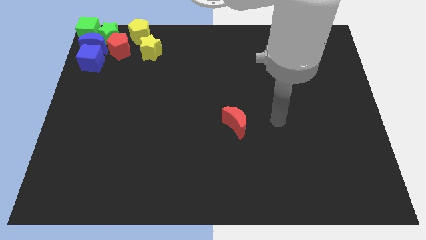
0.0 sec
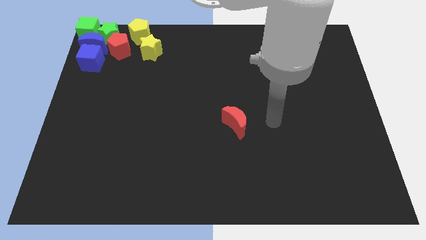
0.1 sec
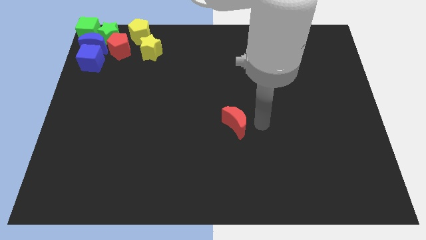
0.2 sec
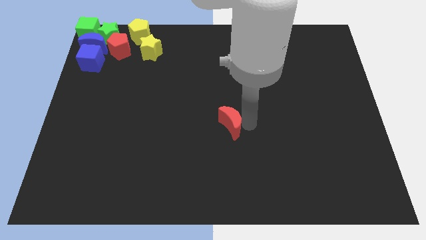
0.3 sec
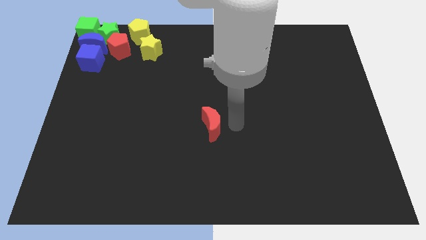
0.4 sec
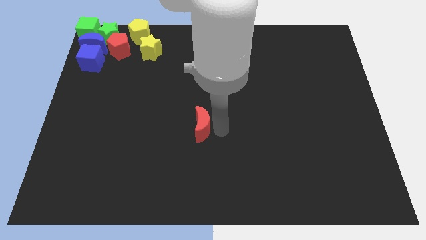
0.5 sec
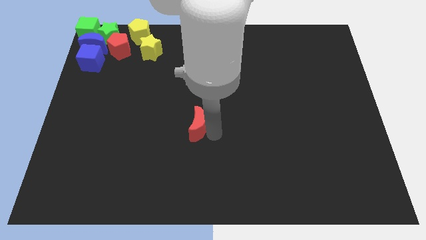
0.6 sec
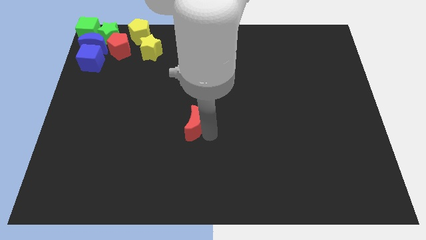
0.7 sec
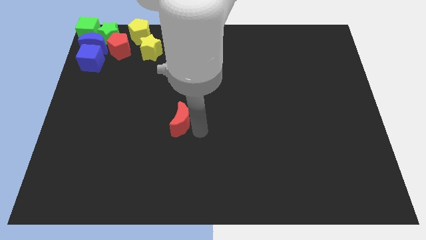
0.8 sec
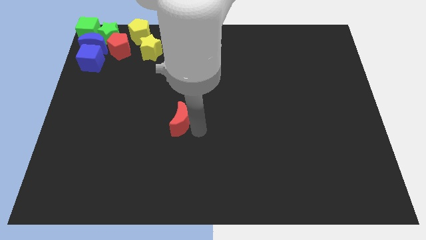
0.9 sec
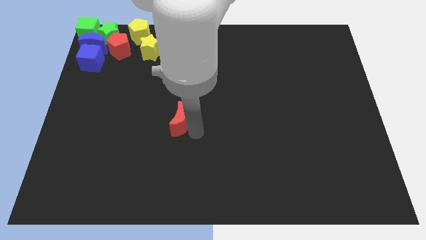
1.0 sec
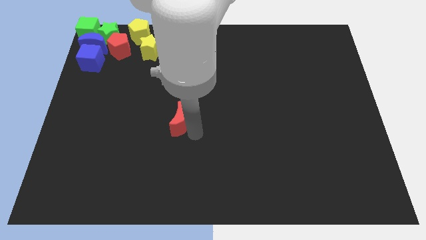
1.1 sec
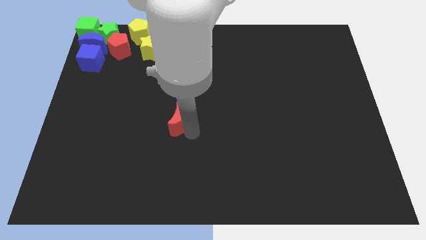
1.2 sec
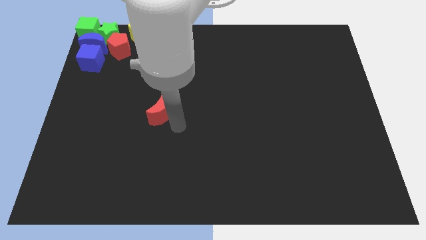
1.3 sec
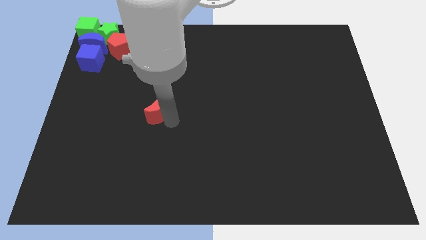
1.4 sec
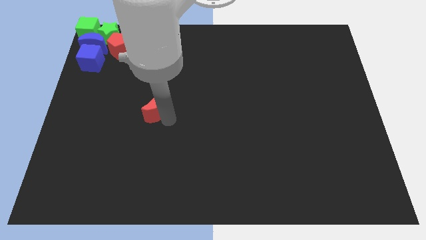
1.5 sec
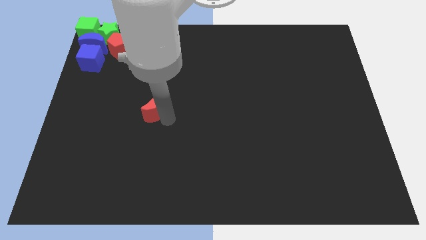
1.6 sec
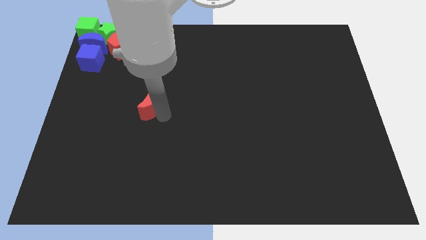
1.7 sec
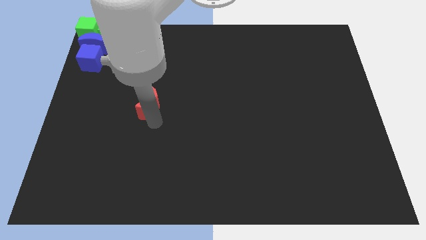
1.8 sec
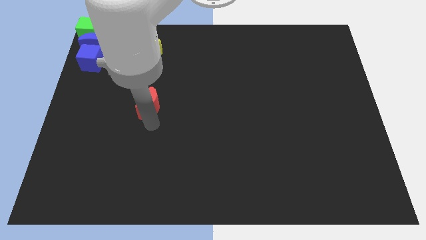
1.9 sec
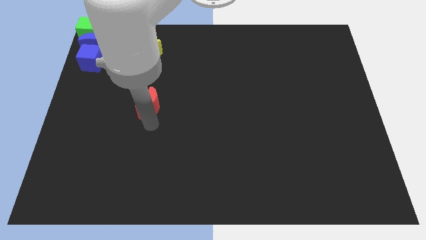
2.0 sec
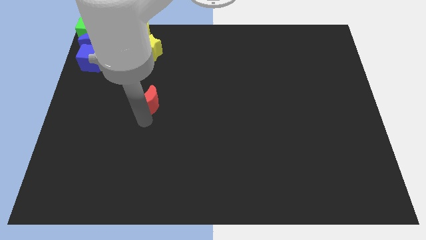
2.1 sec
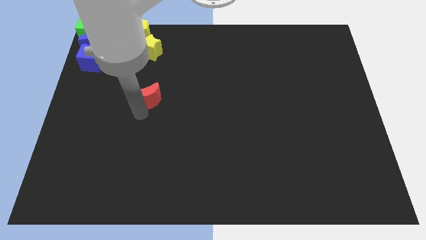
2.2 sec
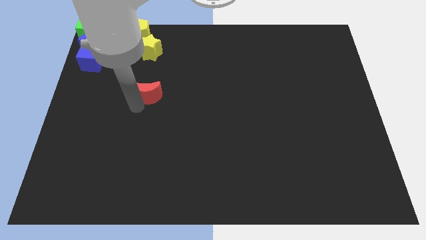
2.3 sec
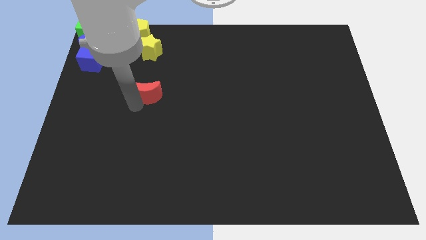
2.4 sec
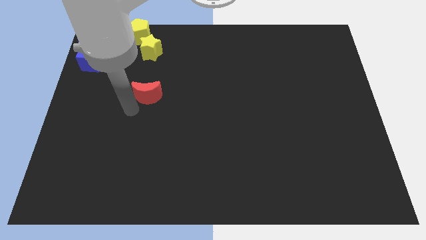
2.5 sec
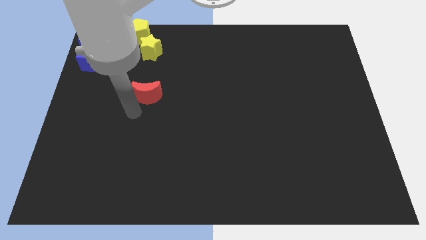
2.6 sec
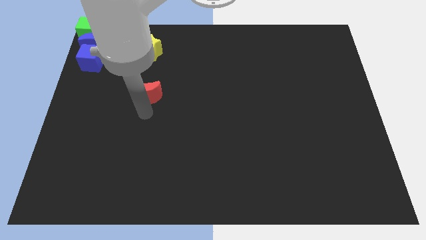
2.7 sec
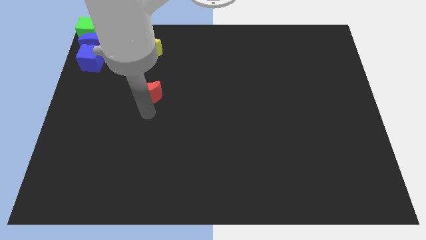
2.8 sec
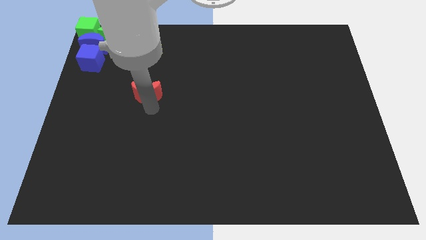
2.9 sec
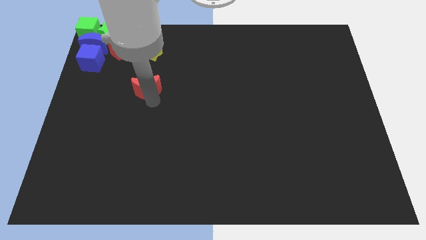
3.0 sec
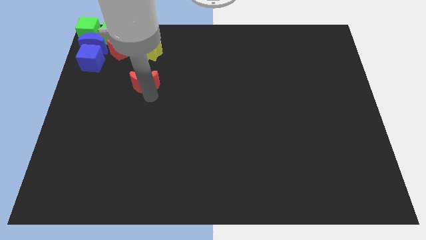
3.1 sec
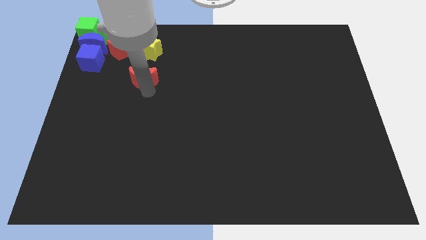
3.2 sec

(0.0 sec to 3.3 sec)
move the red crescent towards the yellow star

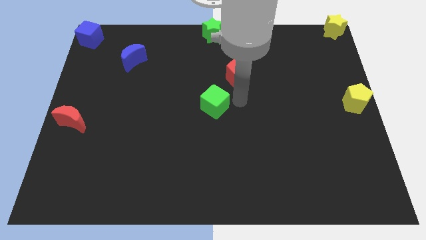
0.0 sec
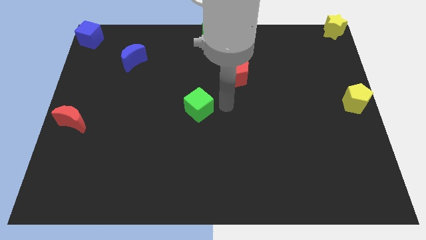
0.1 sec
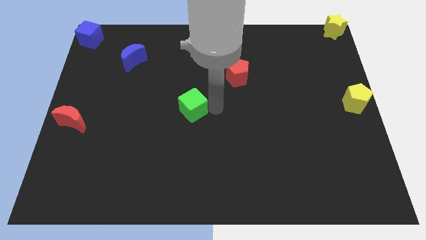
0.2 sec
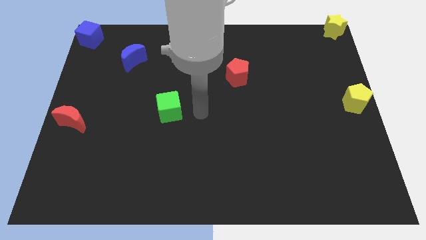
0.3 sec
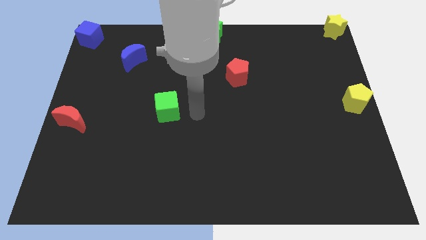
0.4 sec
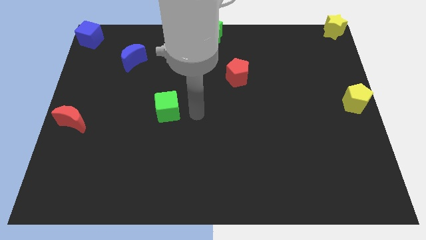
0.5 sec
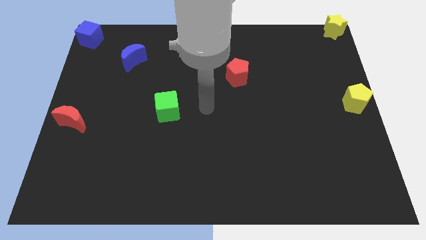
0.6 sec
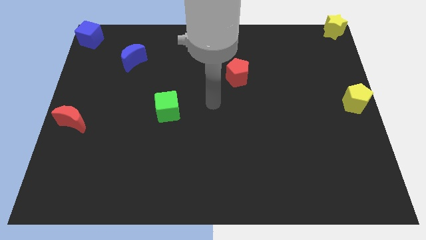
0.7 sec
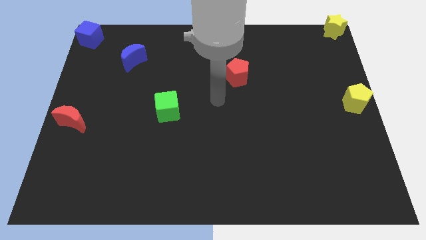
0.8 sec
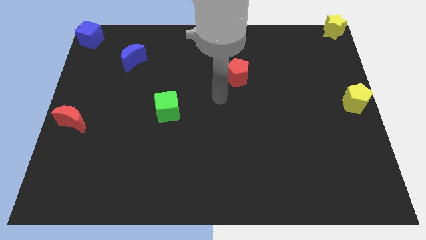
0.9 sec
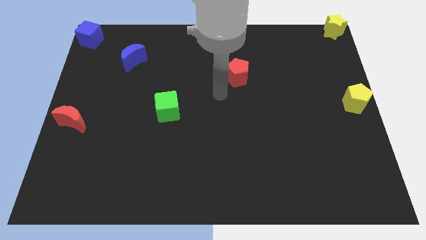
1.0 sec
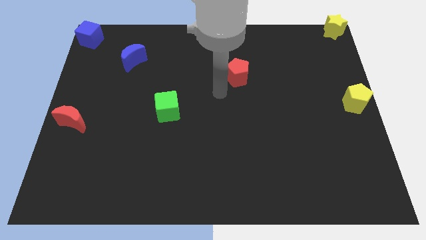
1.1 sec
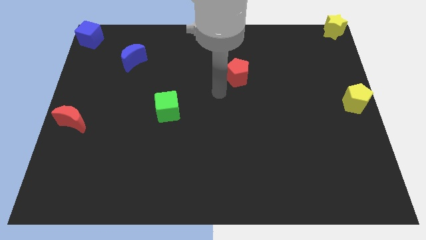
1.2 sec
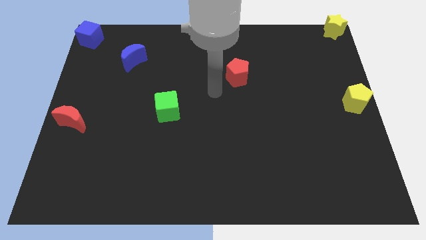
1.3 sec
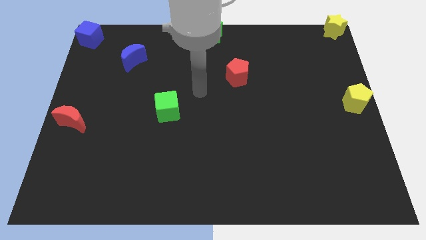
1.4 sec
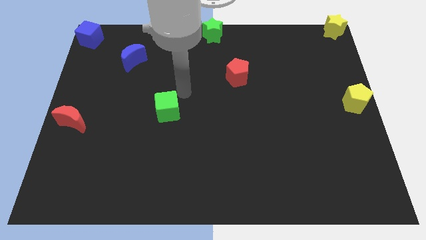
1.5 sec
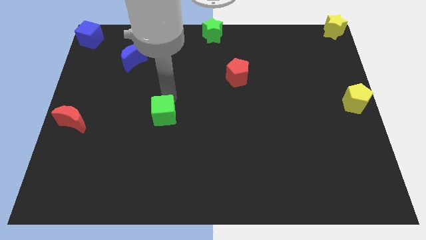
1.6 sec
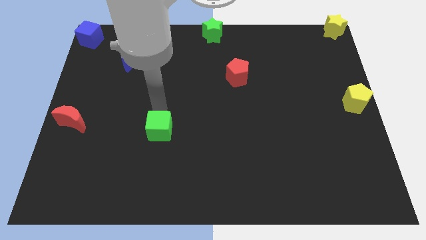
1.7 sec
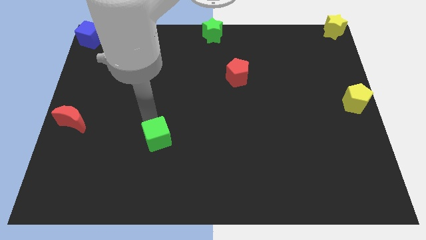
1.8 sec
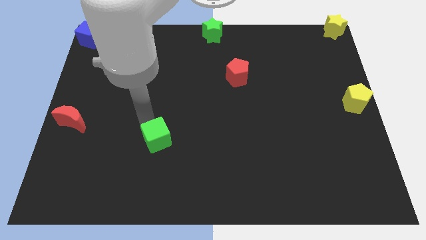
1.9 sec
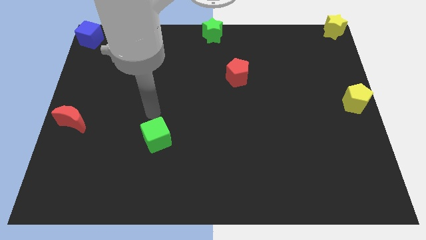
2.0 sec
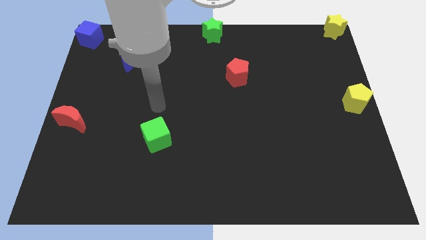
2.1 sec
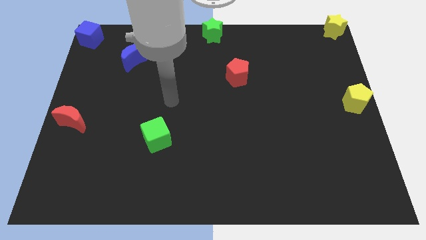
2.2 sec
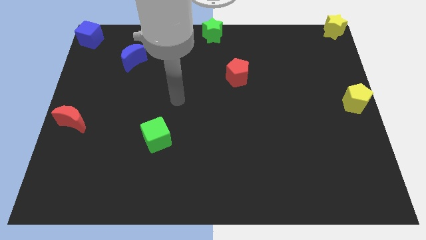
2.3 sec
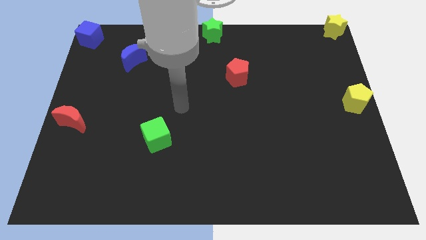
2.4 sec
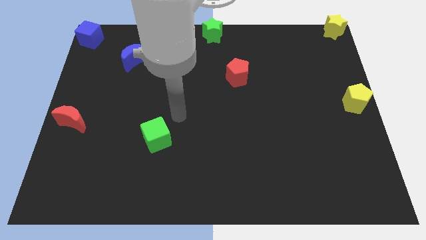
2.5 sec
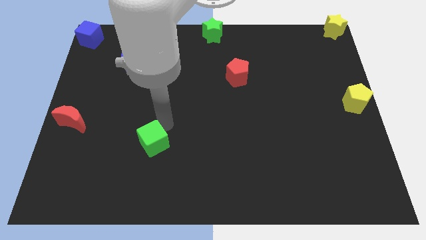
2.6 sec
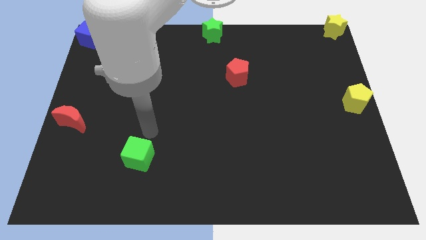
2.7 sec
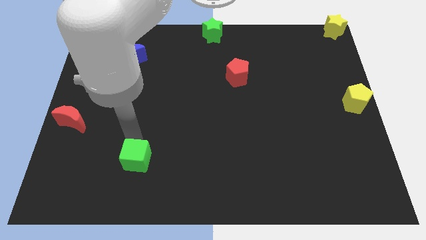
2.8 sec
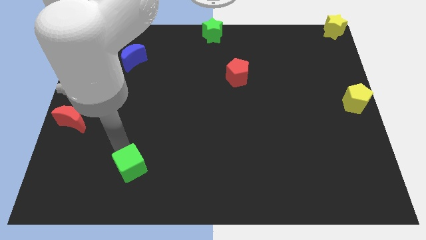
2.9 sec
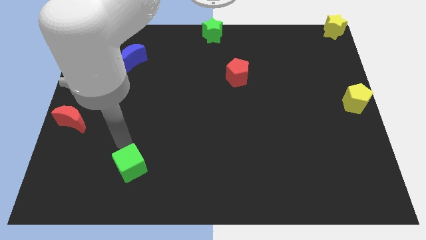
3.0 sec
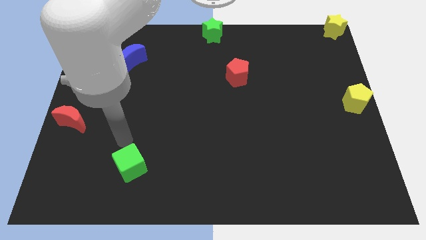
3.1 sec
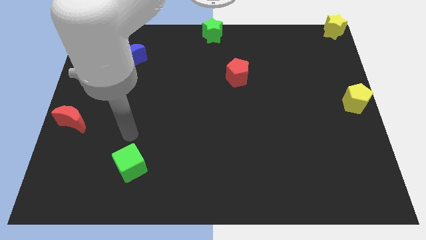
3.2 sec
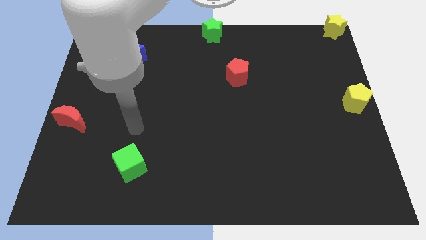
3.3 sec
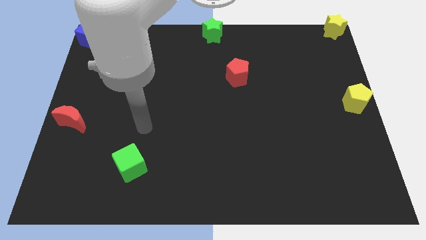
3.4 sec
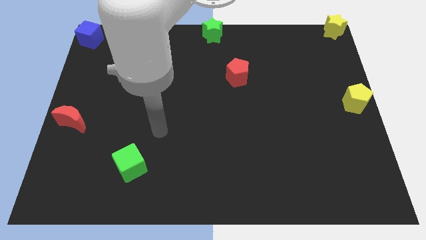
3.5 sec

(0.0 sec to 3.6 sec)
move the green cube parallel to the red crescent

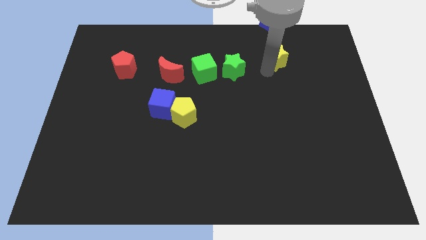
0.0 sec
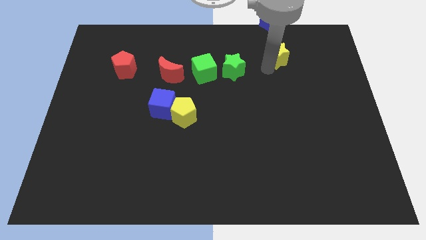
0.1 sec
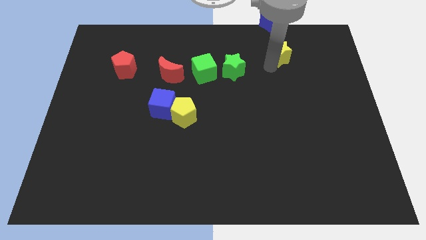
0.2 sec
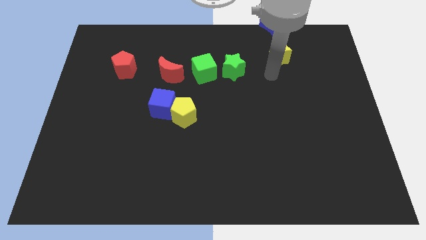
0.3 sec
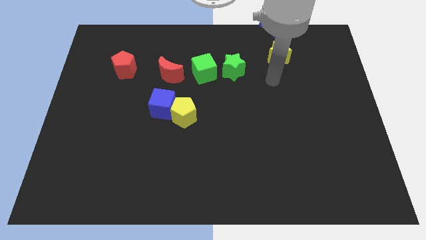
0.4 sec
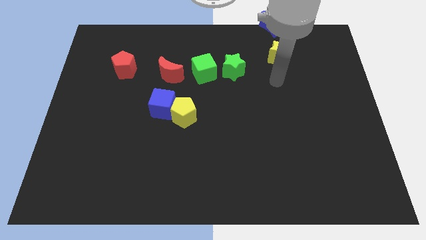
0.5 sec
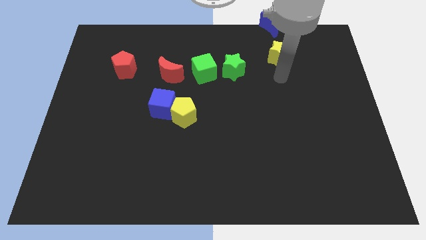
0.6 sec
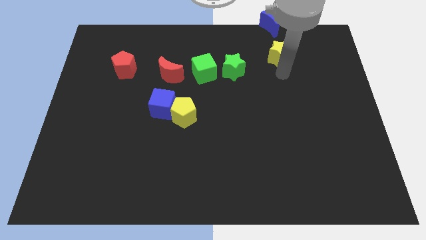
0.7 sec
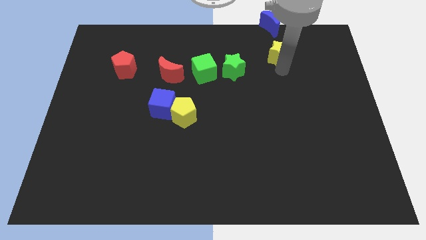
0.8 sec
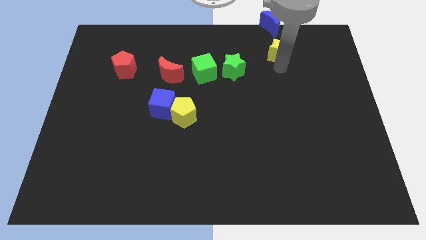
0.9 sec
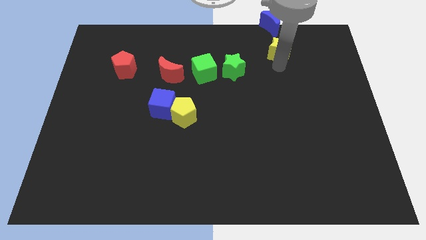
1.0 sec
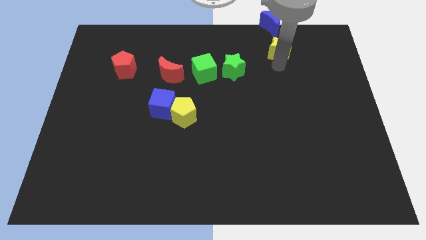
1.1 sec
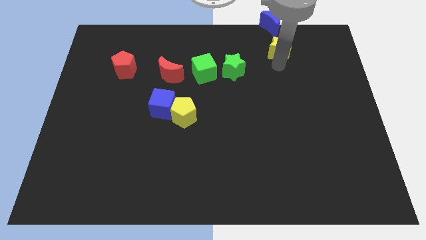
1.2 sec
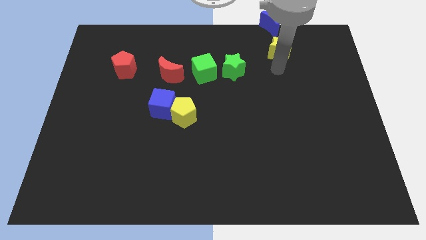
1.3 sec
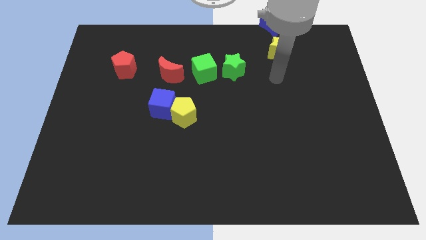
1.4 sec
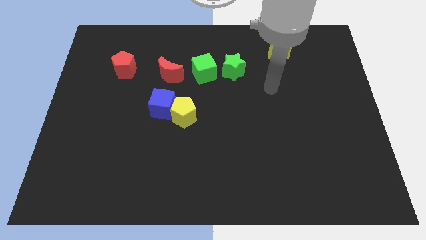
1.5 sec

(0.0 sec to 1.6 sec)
drag the yellow star to the bottom side of the blue moon

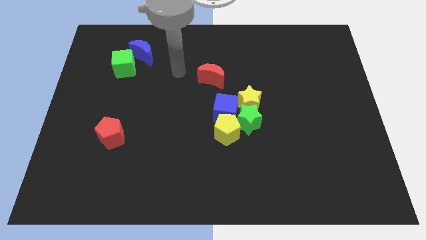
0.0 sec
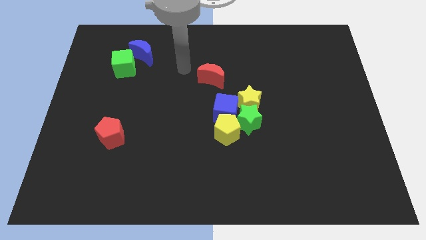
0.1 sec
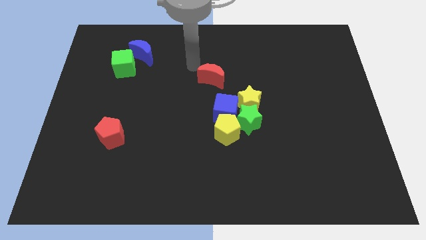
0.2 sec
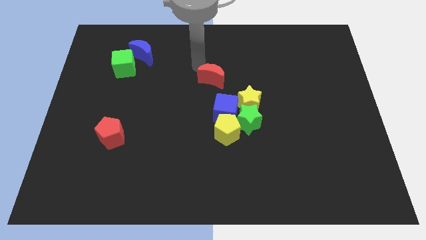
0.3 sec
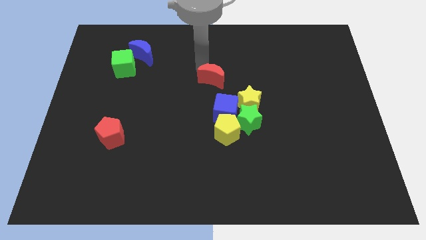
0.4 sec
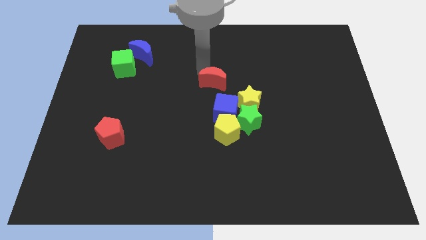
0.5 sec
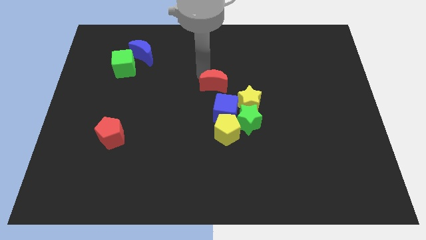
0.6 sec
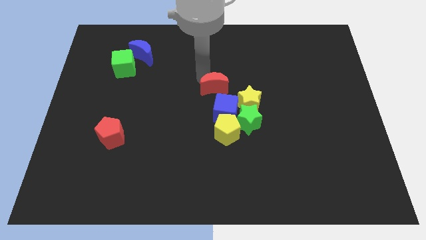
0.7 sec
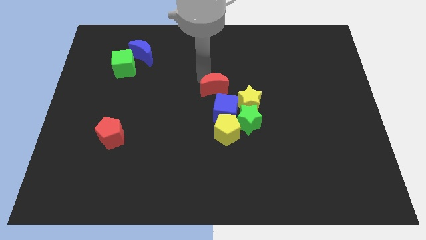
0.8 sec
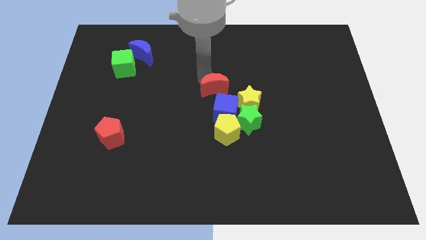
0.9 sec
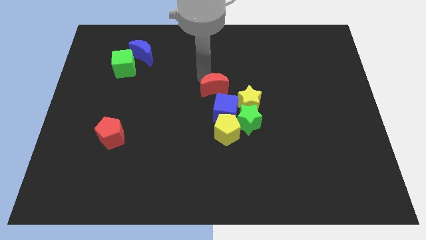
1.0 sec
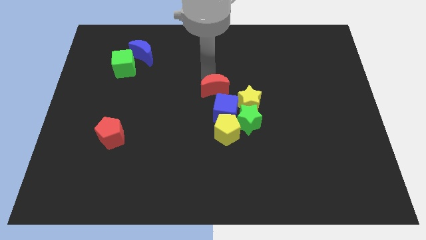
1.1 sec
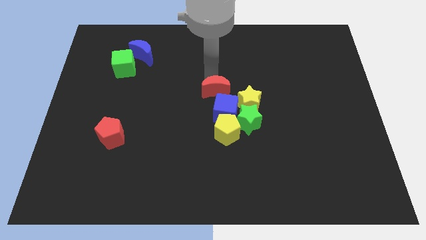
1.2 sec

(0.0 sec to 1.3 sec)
place the red crescent at the top of blue cube
